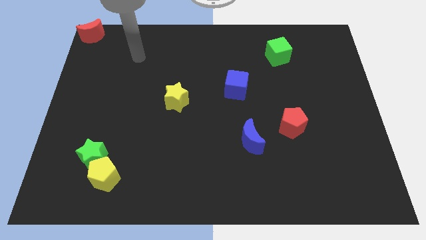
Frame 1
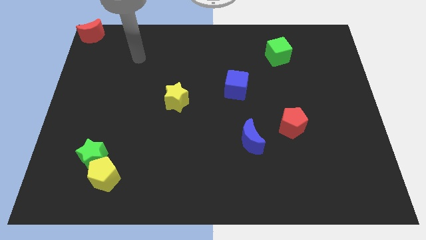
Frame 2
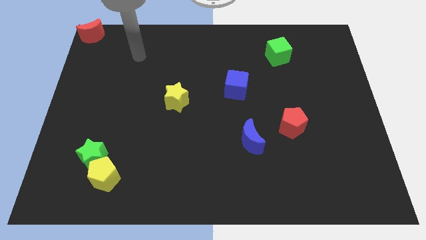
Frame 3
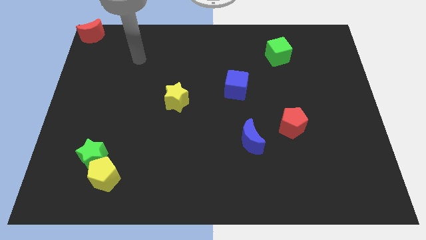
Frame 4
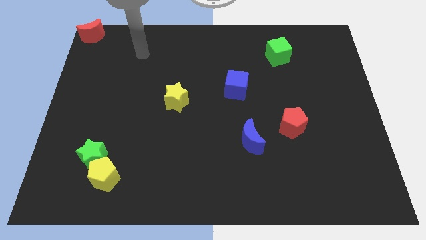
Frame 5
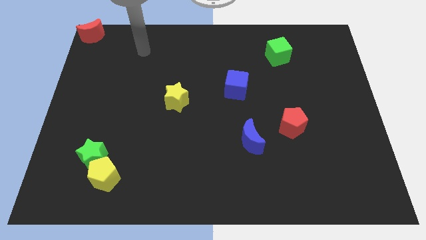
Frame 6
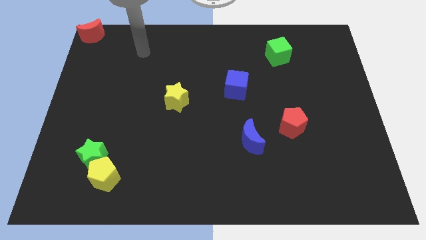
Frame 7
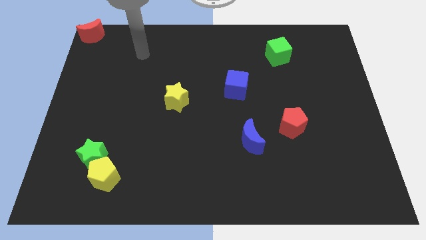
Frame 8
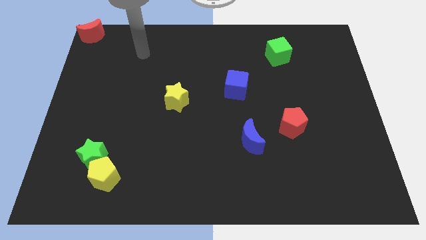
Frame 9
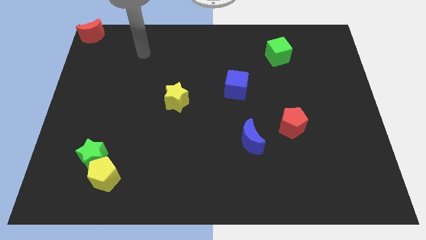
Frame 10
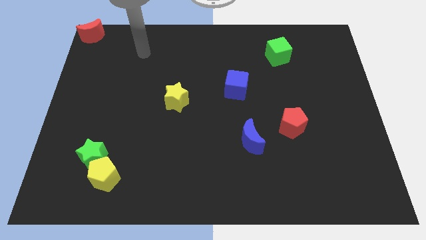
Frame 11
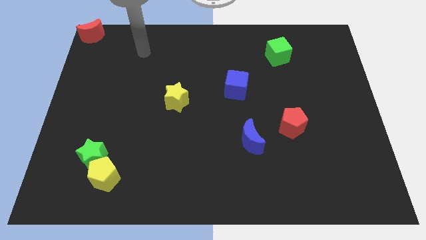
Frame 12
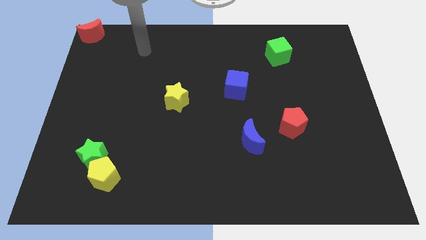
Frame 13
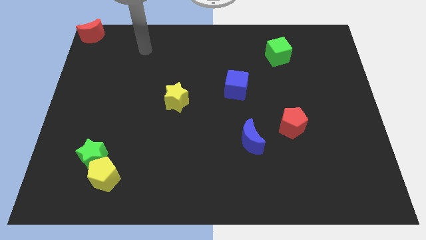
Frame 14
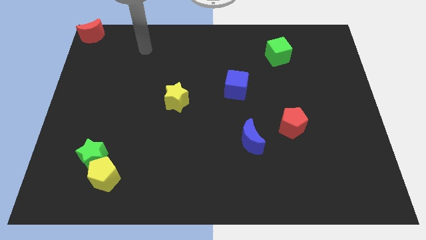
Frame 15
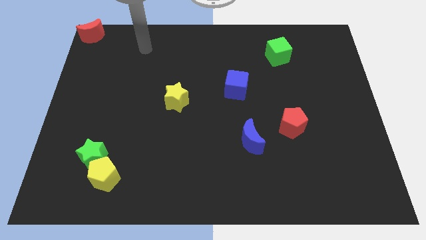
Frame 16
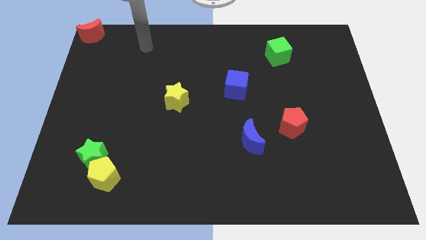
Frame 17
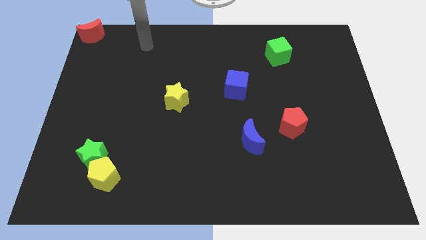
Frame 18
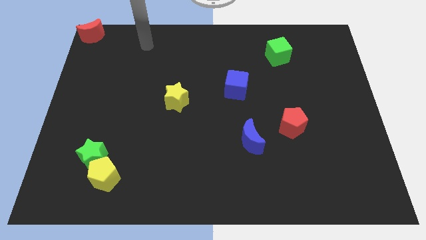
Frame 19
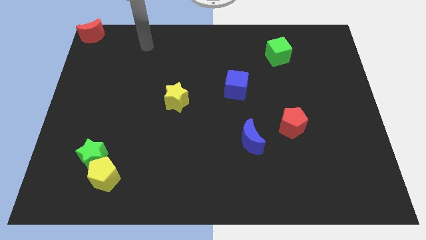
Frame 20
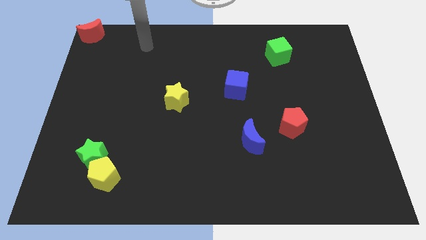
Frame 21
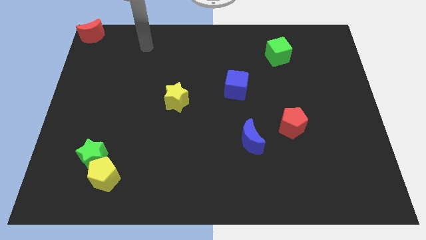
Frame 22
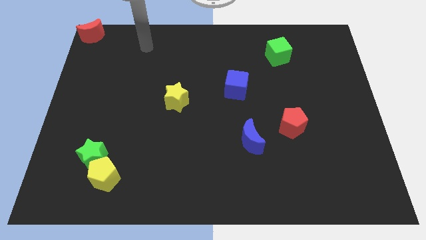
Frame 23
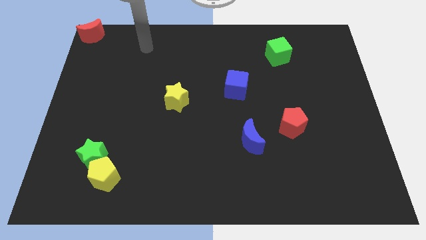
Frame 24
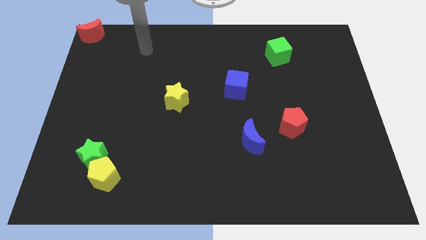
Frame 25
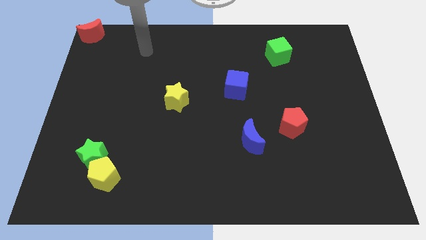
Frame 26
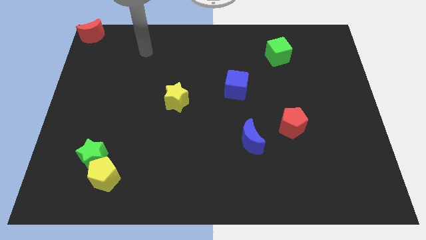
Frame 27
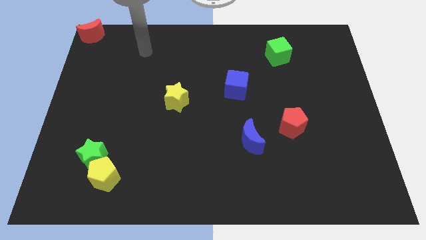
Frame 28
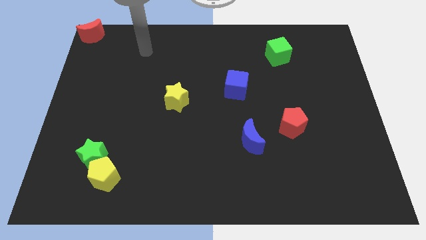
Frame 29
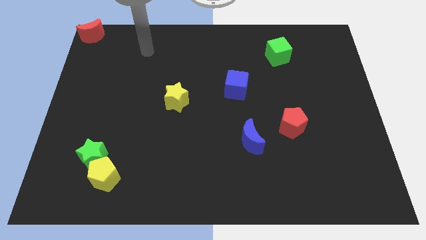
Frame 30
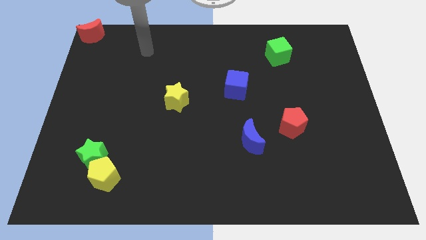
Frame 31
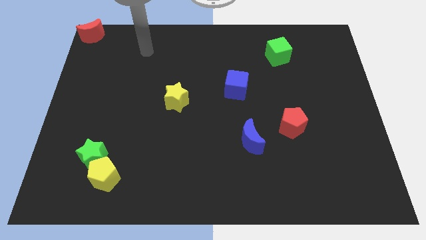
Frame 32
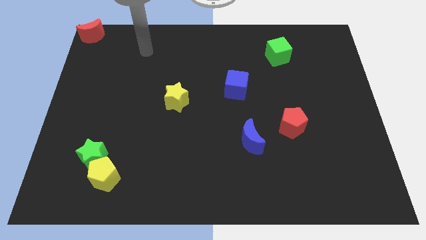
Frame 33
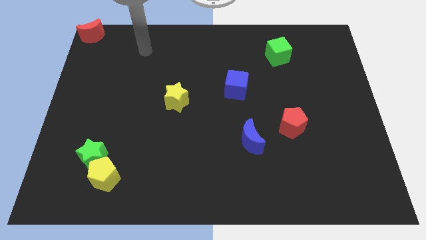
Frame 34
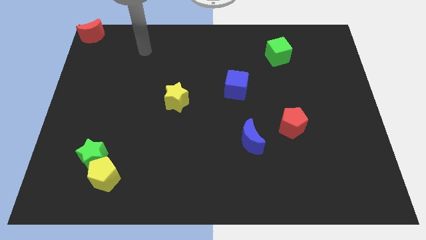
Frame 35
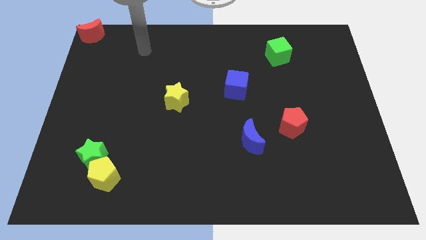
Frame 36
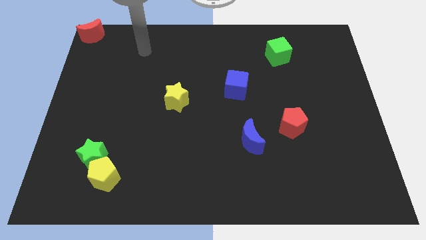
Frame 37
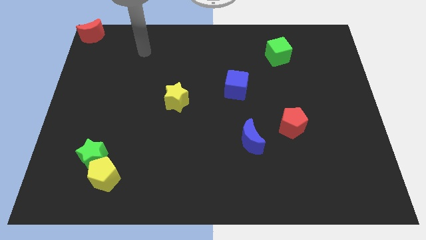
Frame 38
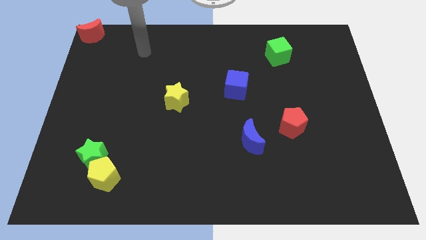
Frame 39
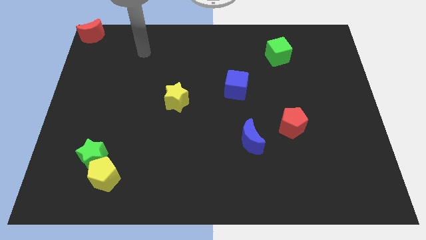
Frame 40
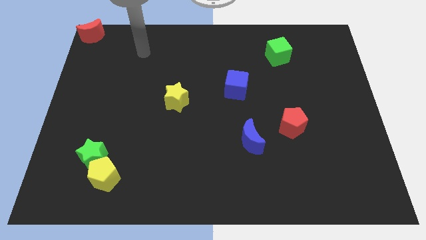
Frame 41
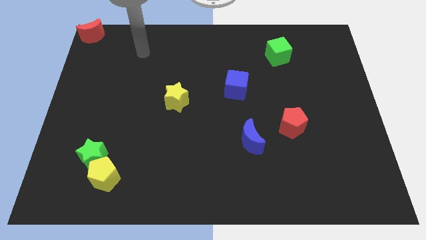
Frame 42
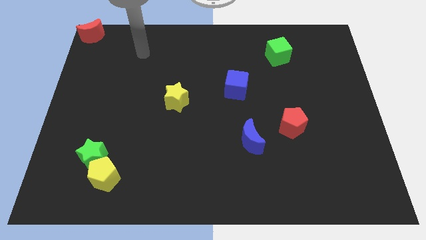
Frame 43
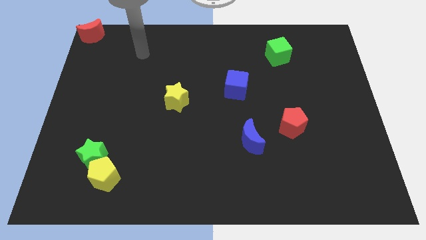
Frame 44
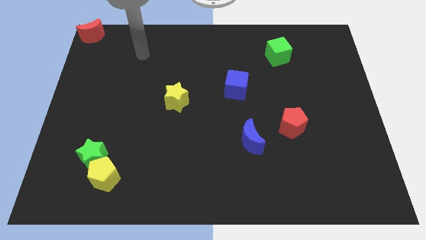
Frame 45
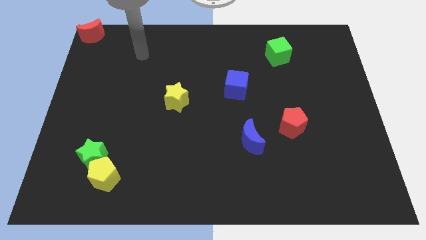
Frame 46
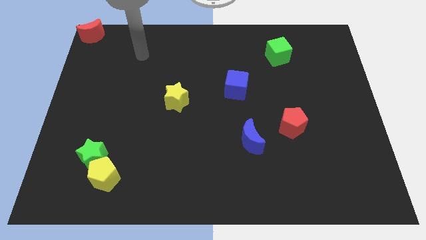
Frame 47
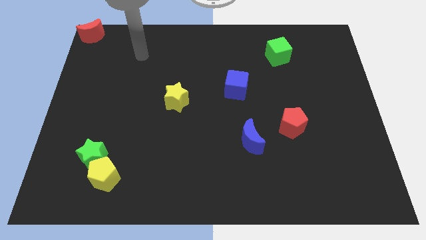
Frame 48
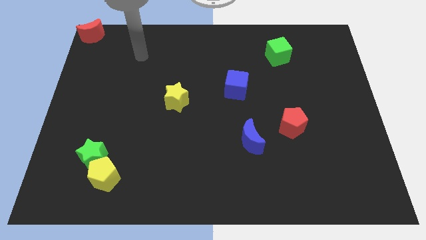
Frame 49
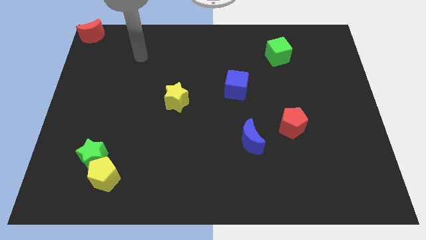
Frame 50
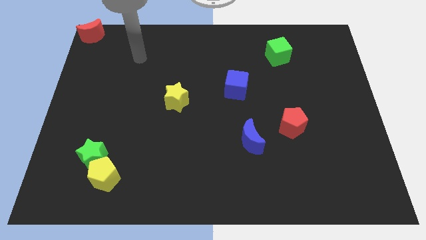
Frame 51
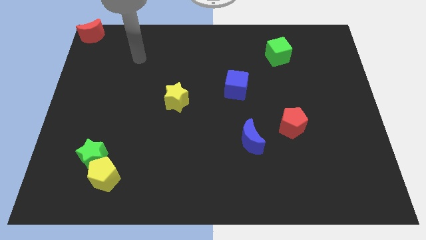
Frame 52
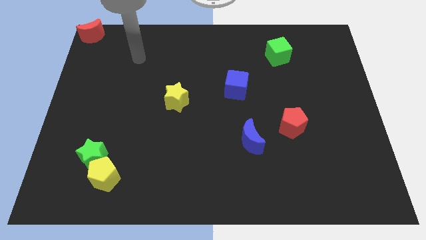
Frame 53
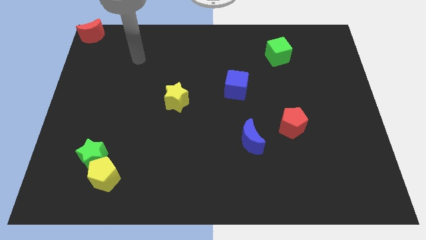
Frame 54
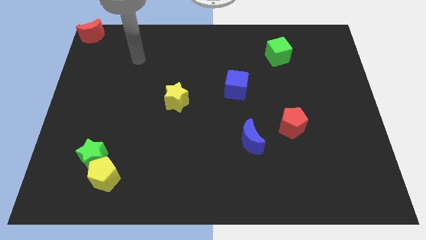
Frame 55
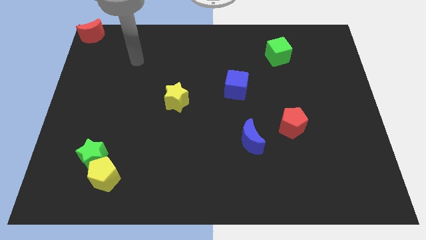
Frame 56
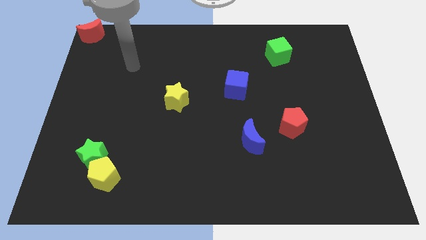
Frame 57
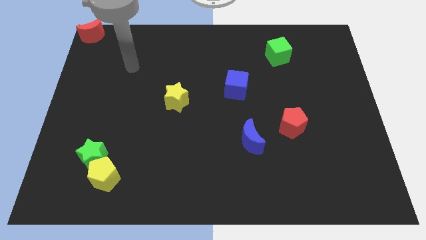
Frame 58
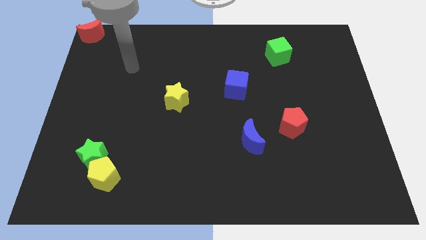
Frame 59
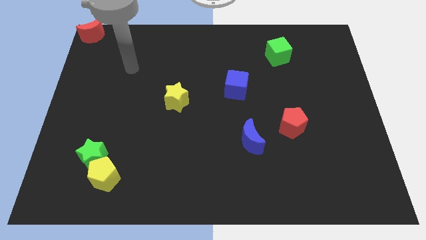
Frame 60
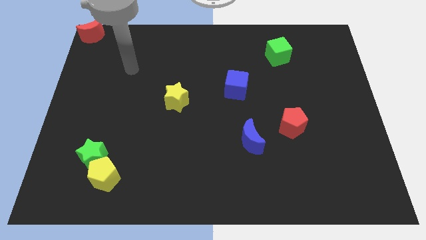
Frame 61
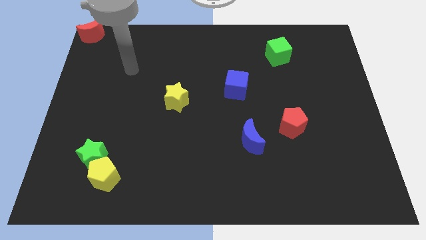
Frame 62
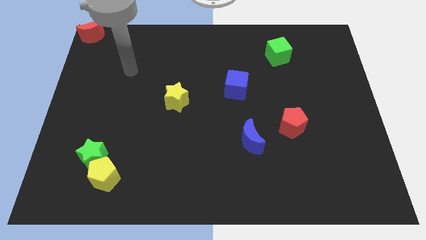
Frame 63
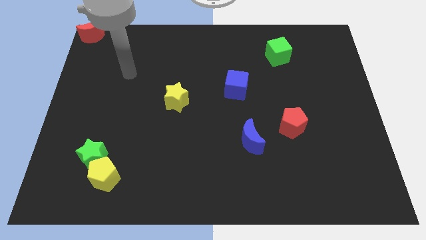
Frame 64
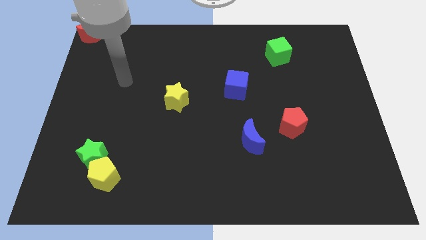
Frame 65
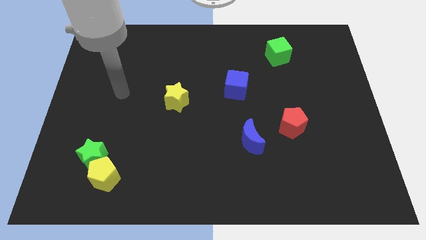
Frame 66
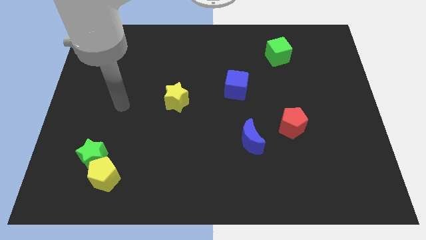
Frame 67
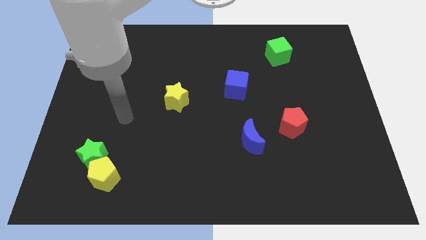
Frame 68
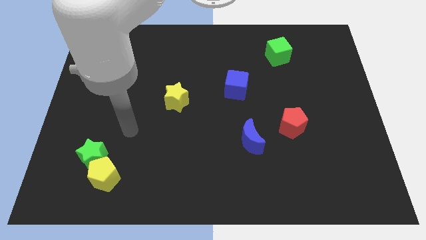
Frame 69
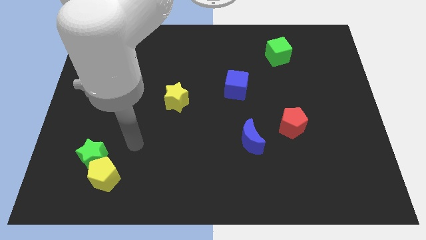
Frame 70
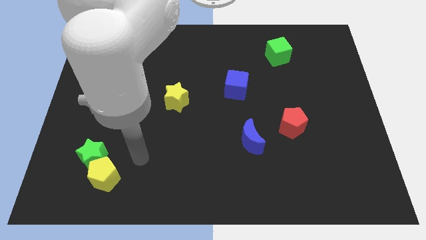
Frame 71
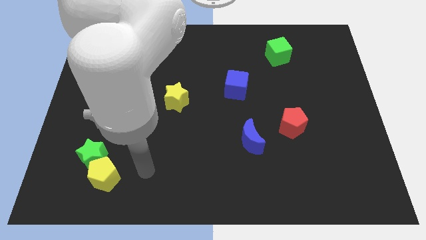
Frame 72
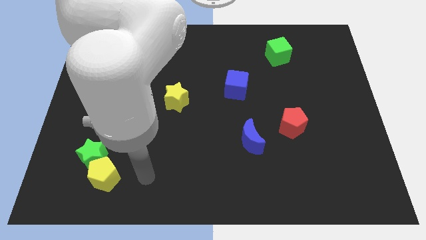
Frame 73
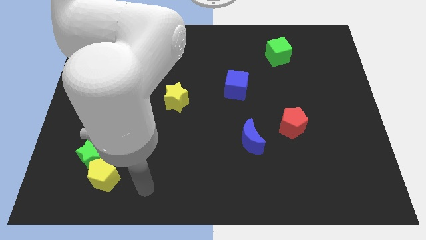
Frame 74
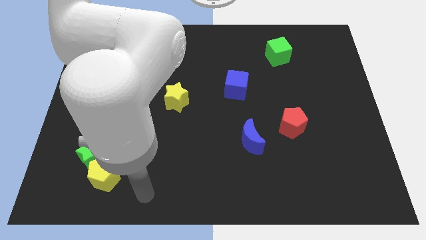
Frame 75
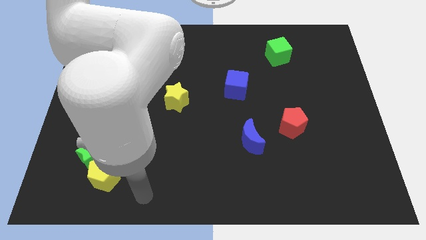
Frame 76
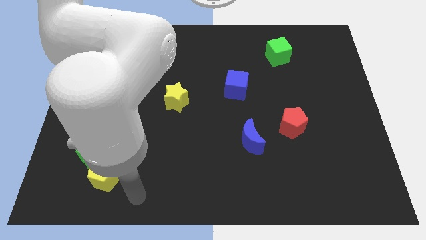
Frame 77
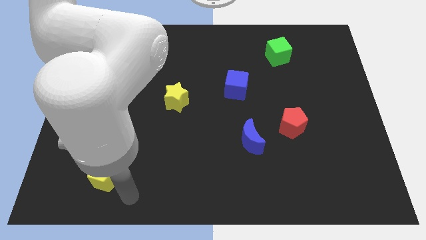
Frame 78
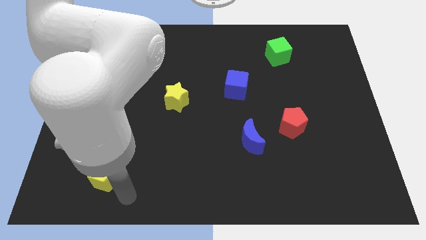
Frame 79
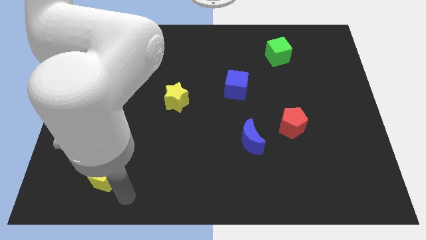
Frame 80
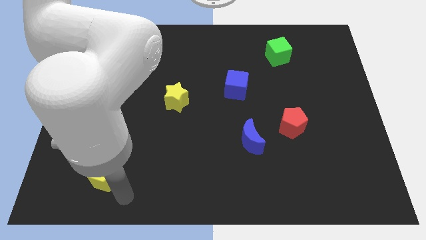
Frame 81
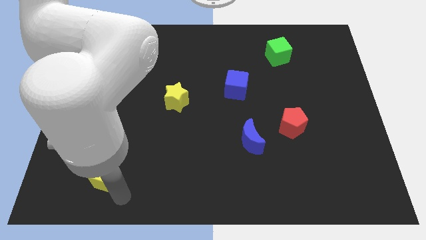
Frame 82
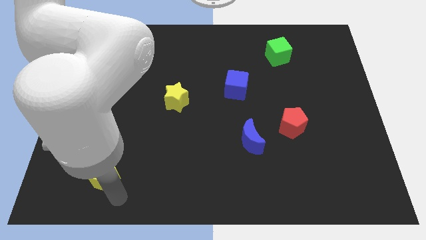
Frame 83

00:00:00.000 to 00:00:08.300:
move your arm towards the bottom of the yellow pentagon

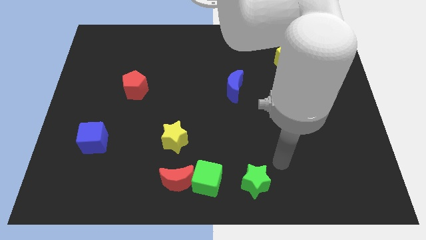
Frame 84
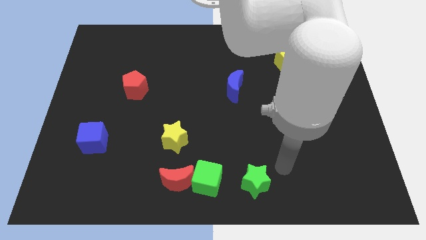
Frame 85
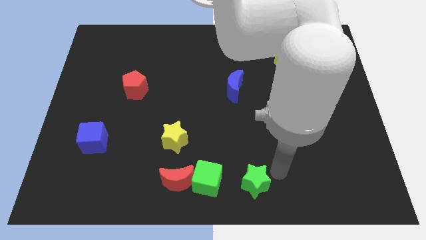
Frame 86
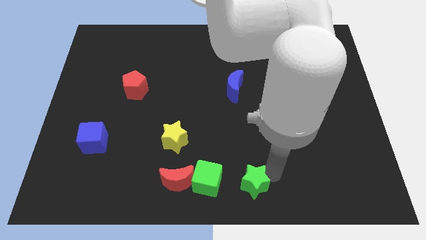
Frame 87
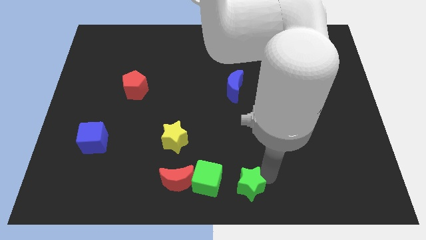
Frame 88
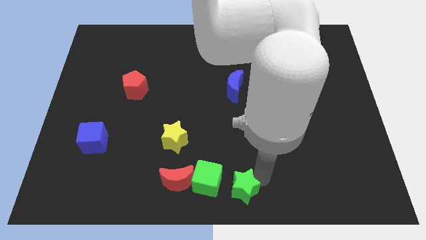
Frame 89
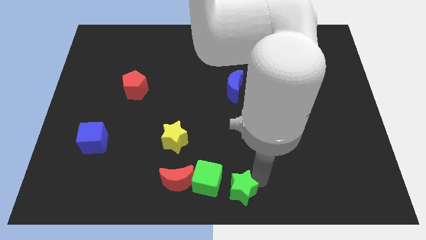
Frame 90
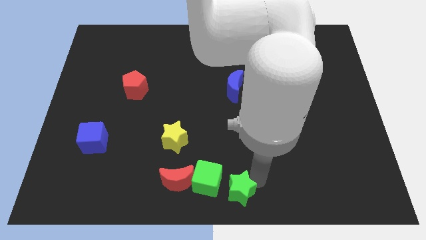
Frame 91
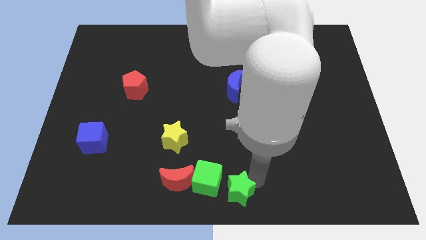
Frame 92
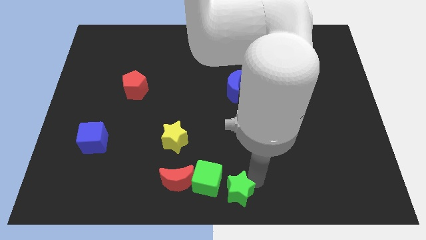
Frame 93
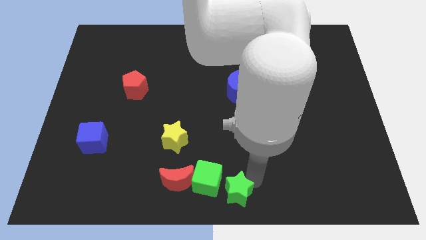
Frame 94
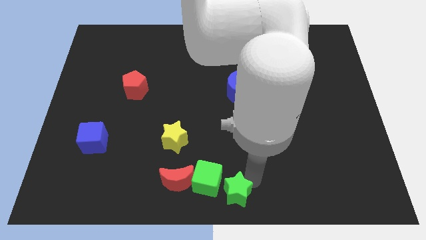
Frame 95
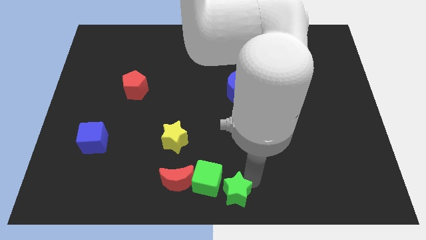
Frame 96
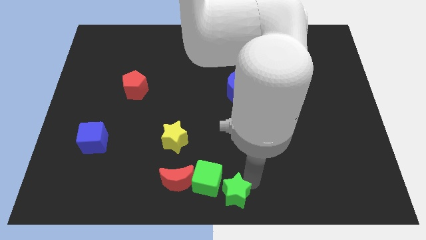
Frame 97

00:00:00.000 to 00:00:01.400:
push the green star to the right side of the green cube
